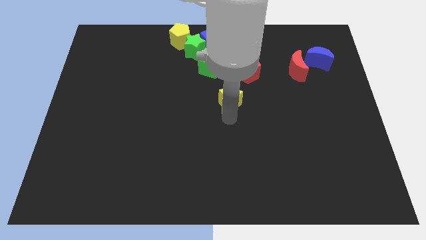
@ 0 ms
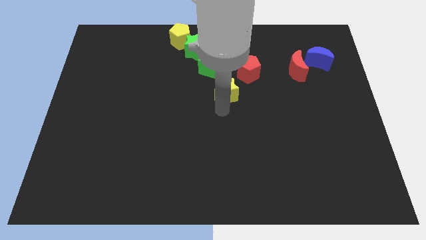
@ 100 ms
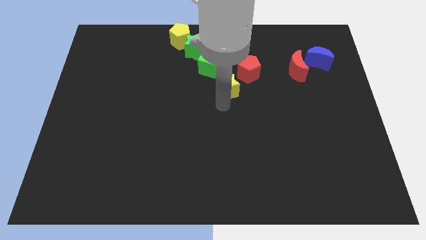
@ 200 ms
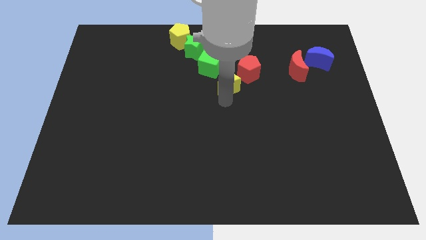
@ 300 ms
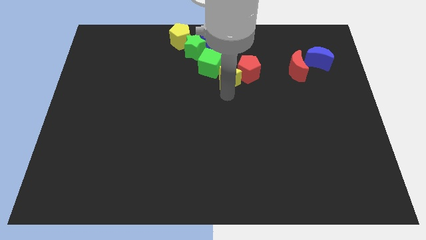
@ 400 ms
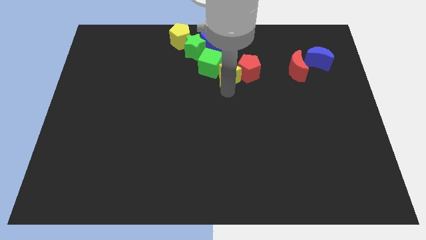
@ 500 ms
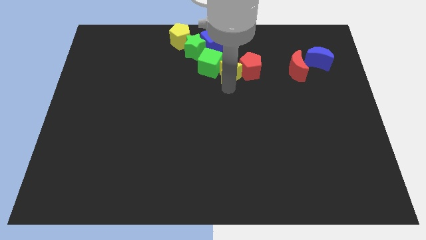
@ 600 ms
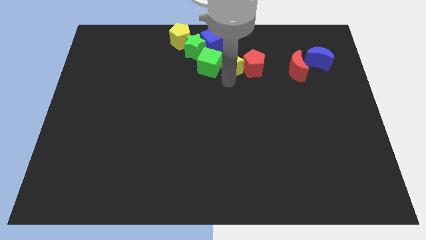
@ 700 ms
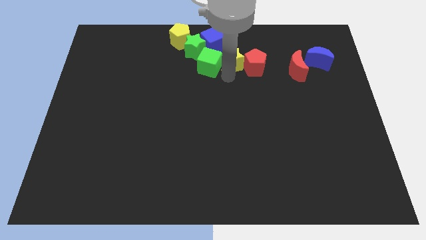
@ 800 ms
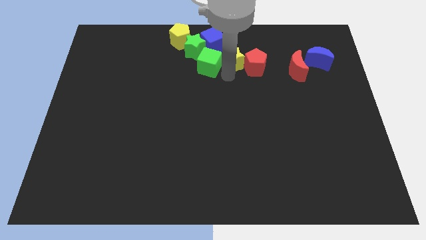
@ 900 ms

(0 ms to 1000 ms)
place the yellow star in between the red pentagon and the green cube

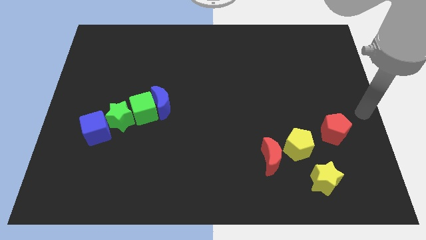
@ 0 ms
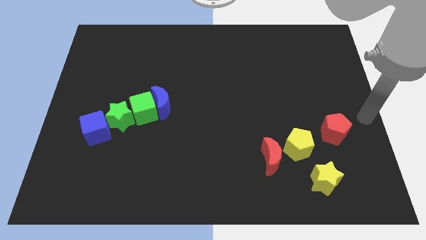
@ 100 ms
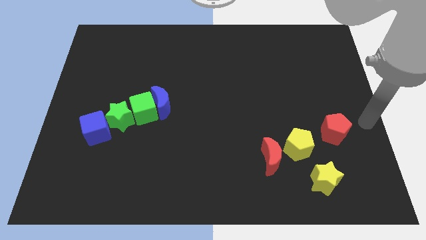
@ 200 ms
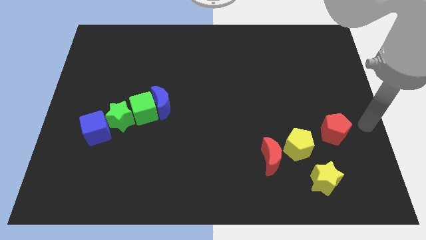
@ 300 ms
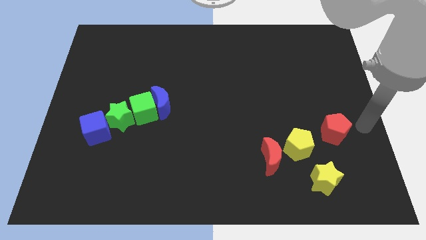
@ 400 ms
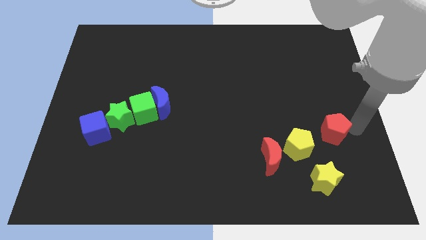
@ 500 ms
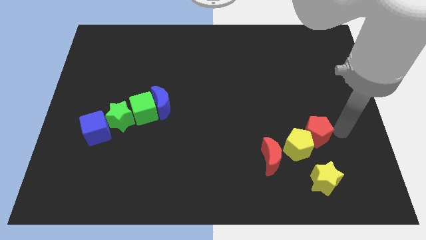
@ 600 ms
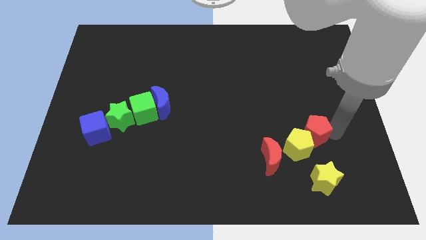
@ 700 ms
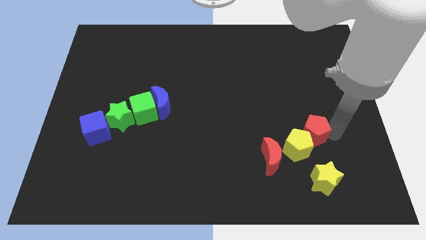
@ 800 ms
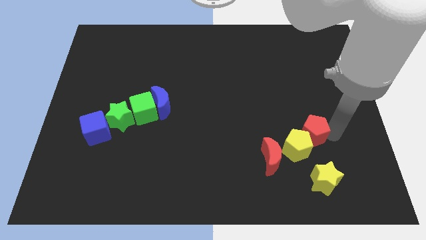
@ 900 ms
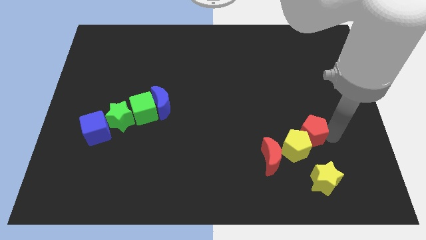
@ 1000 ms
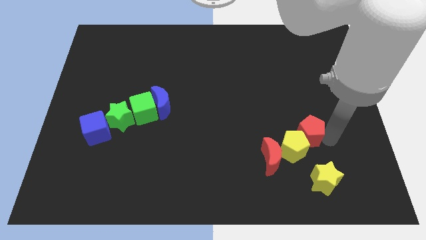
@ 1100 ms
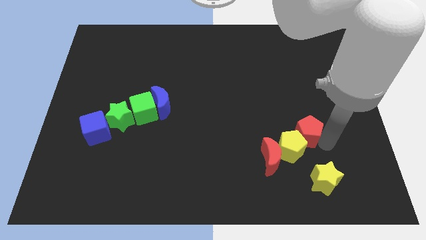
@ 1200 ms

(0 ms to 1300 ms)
push the red pentagon into the yellow pentagon

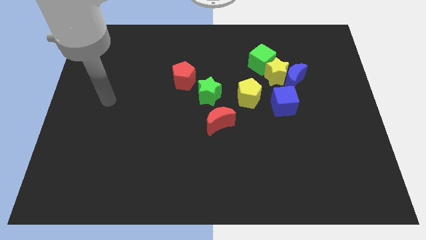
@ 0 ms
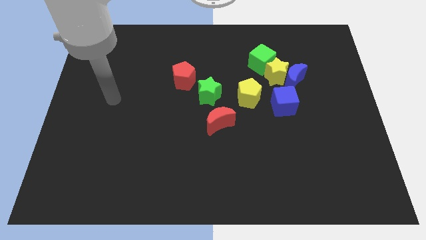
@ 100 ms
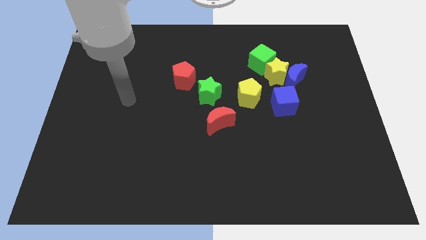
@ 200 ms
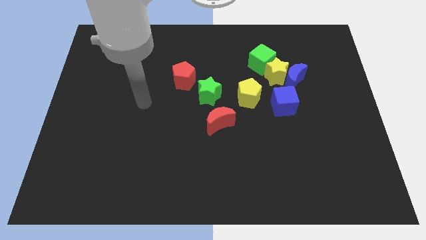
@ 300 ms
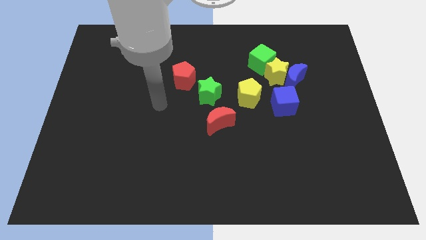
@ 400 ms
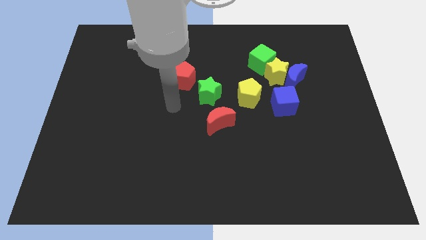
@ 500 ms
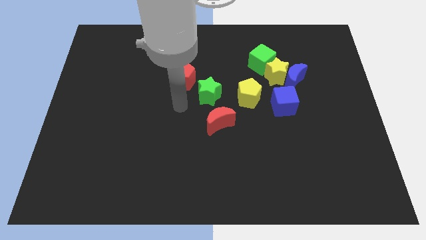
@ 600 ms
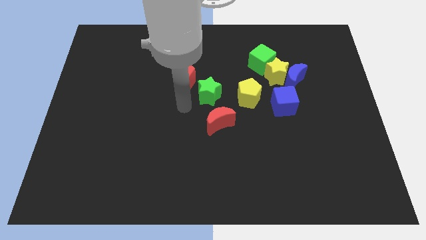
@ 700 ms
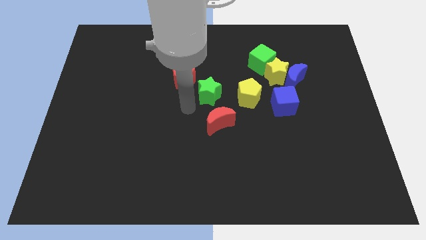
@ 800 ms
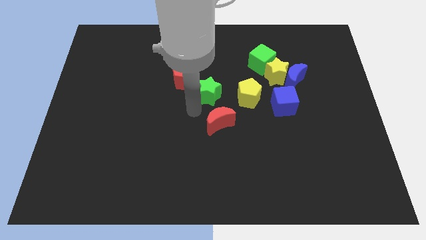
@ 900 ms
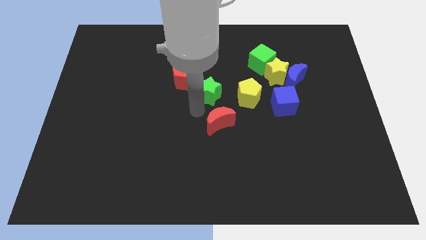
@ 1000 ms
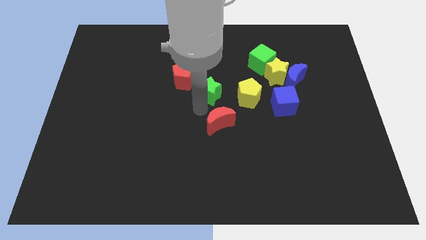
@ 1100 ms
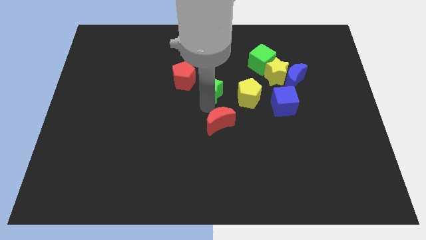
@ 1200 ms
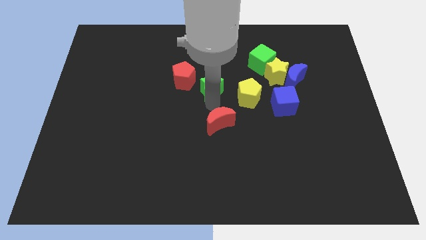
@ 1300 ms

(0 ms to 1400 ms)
touch the bottom of the green star

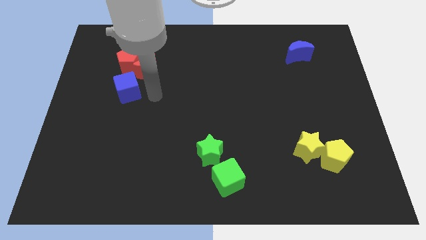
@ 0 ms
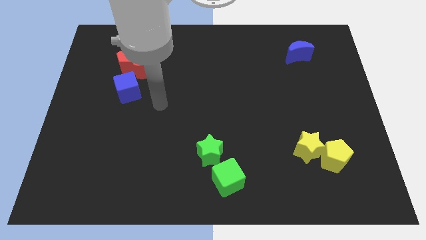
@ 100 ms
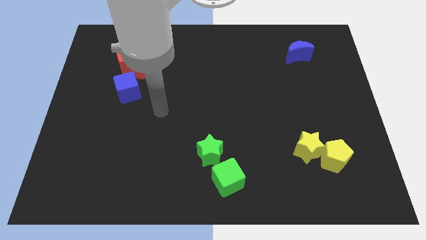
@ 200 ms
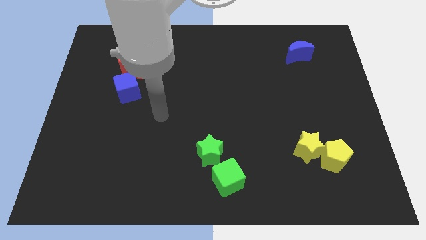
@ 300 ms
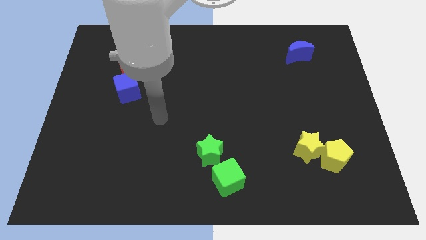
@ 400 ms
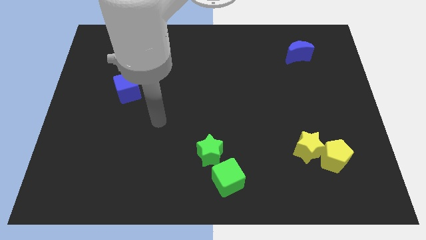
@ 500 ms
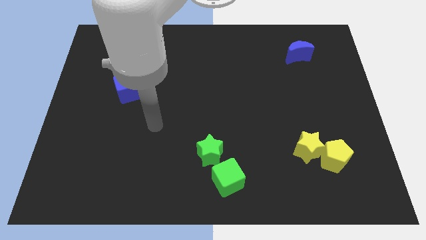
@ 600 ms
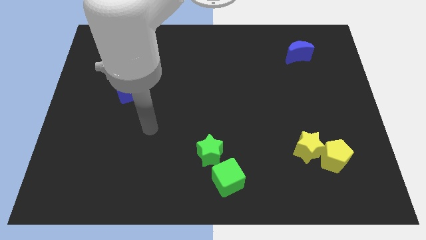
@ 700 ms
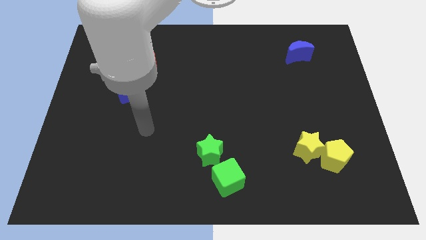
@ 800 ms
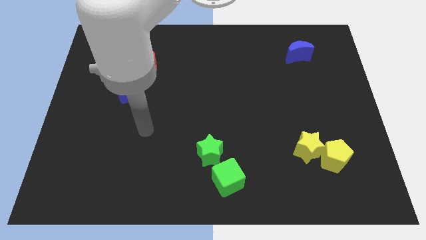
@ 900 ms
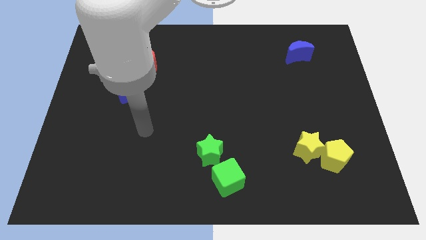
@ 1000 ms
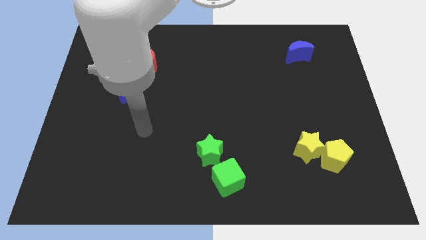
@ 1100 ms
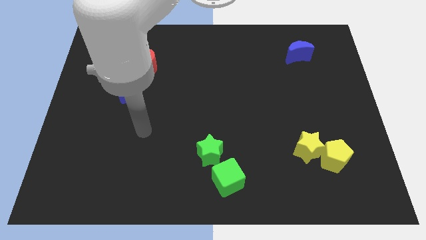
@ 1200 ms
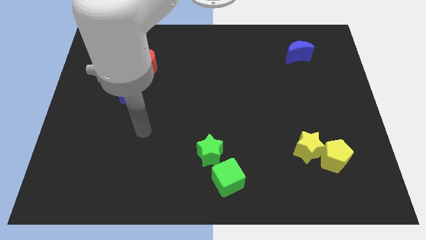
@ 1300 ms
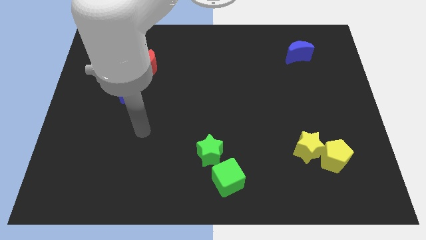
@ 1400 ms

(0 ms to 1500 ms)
move your arm to the bottom of the blue cube

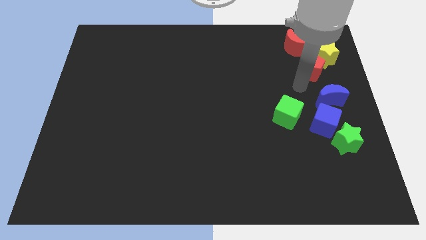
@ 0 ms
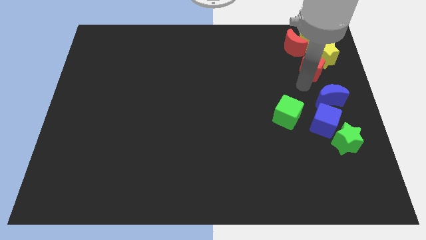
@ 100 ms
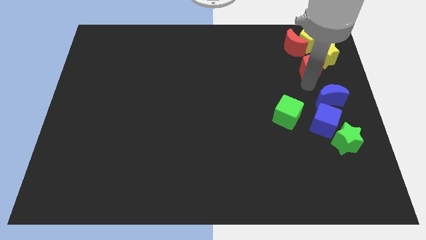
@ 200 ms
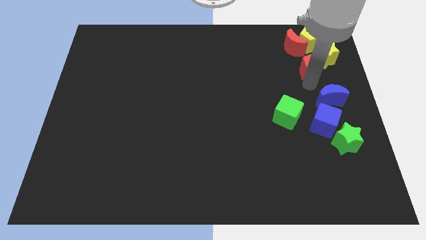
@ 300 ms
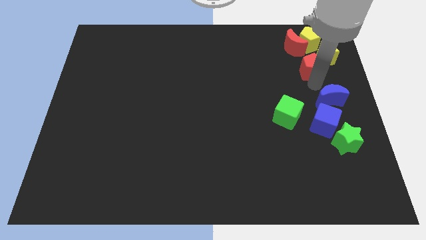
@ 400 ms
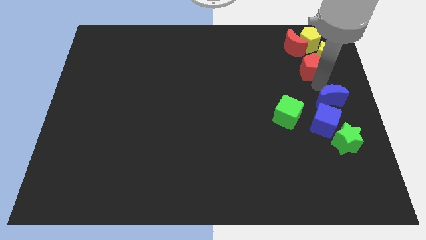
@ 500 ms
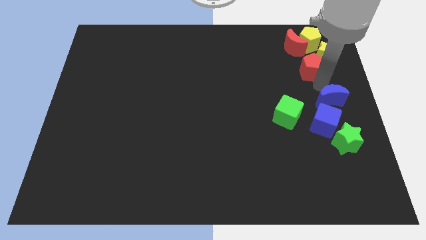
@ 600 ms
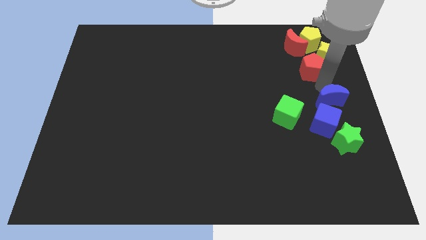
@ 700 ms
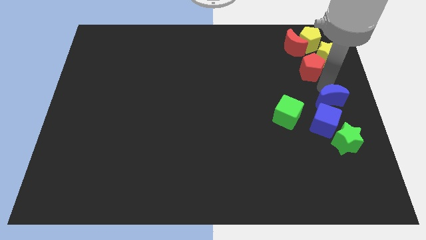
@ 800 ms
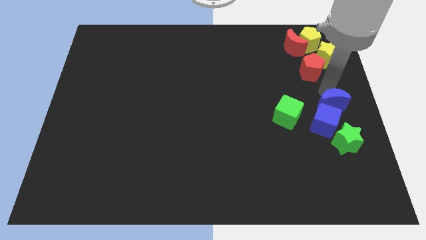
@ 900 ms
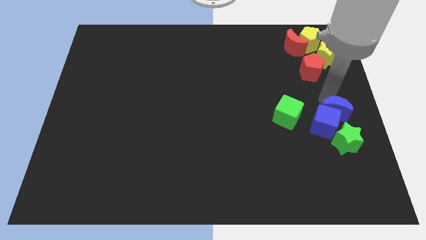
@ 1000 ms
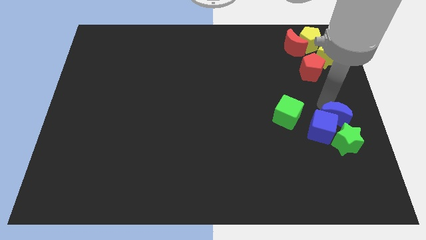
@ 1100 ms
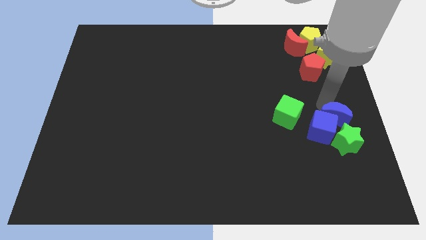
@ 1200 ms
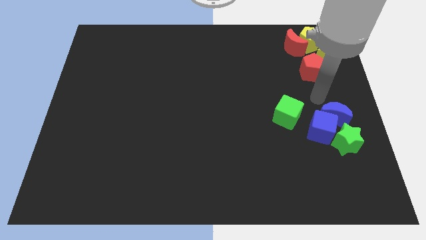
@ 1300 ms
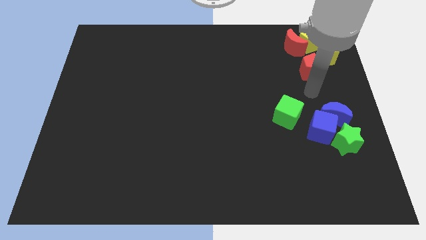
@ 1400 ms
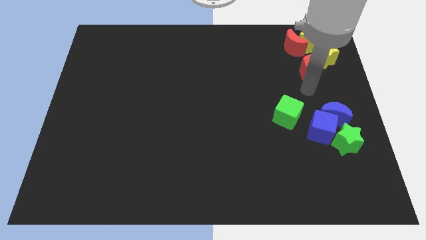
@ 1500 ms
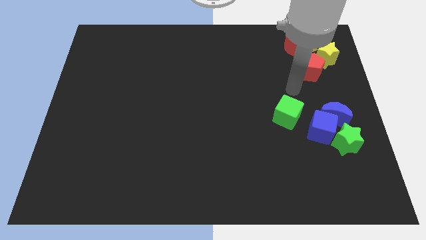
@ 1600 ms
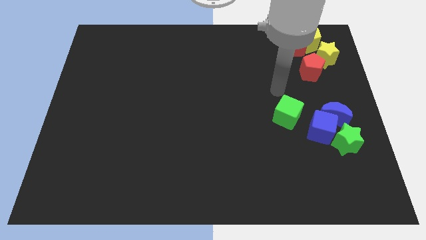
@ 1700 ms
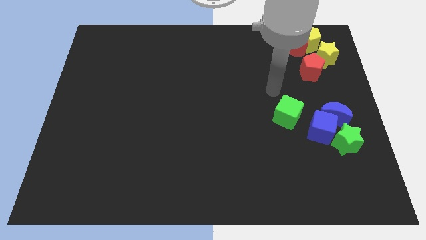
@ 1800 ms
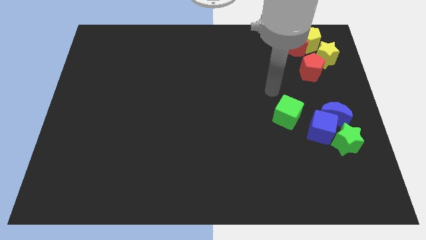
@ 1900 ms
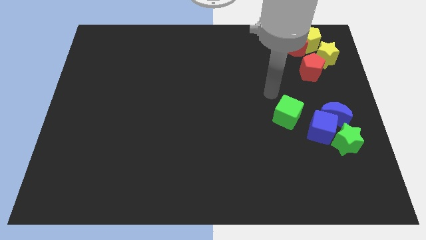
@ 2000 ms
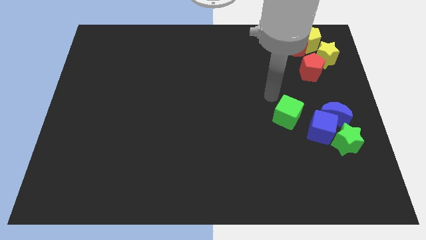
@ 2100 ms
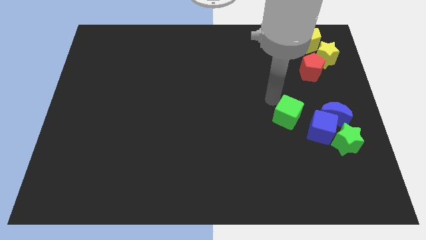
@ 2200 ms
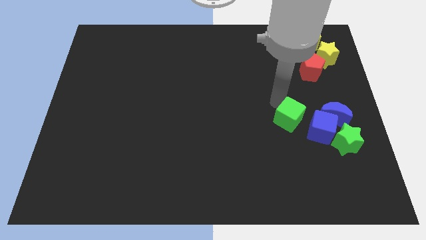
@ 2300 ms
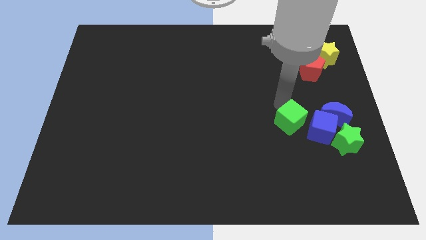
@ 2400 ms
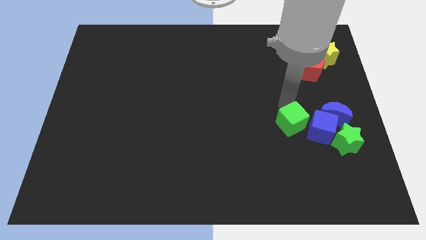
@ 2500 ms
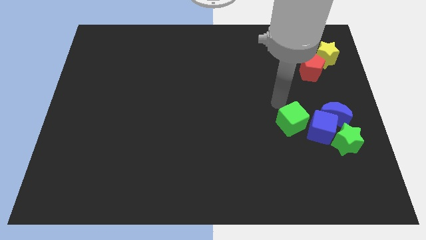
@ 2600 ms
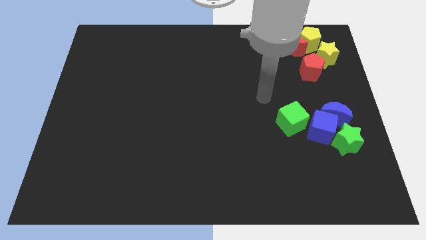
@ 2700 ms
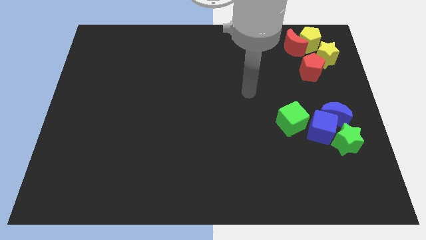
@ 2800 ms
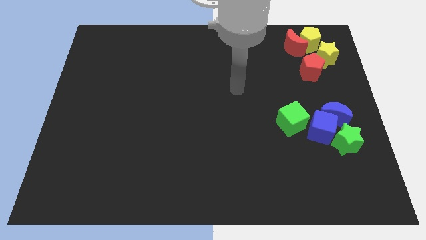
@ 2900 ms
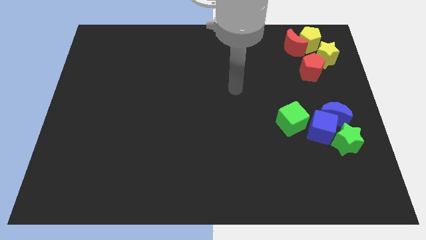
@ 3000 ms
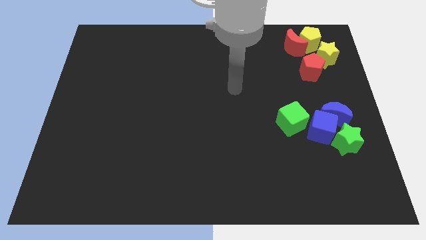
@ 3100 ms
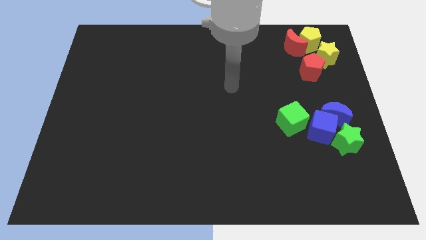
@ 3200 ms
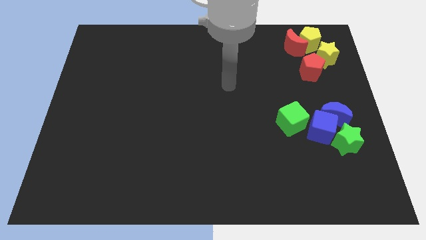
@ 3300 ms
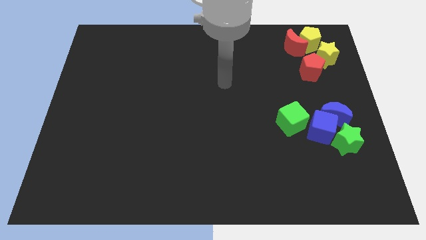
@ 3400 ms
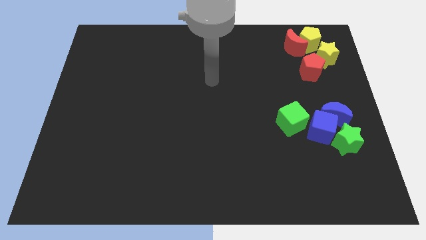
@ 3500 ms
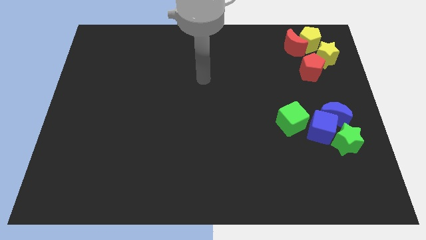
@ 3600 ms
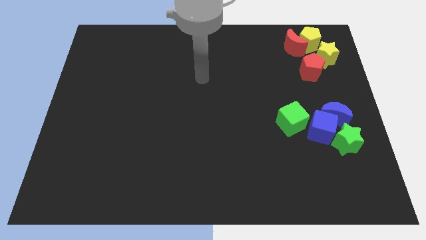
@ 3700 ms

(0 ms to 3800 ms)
place the green and blue blocks at the right center of the board
